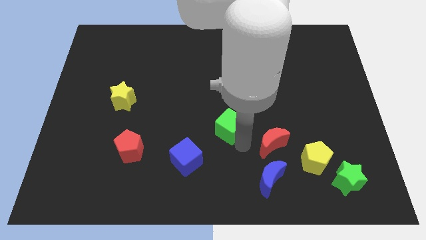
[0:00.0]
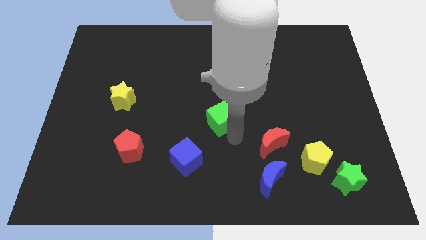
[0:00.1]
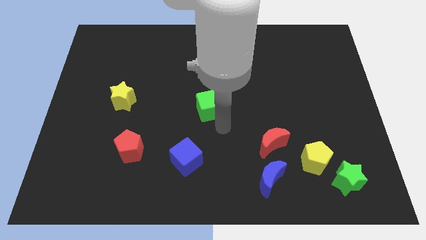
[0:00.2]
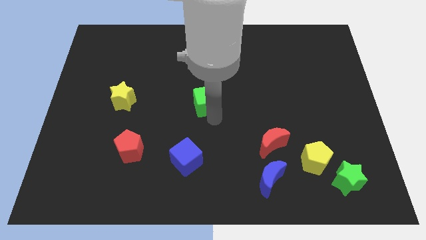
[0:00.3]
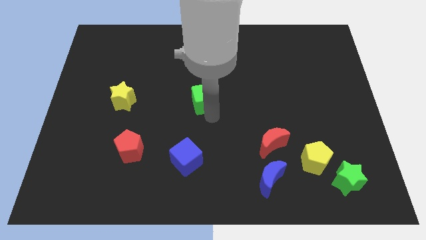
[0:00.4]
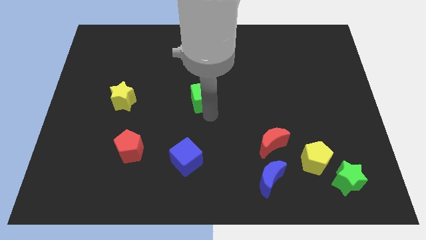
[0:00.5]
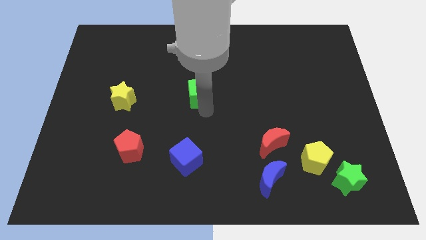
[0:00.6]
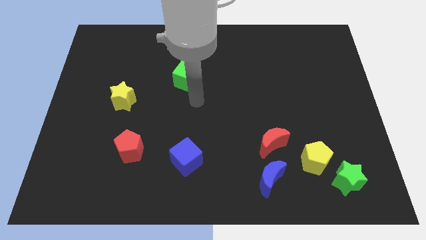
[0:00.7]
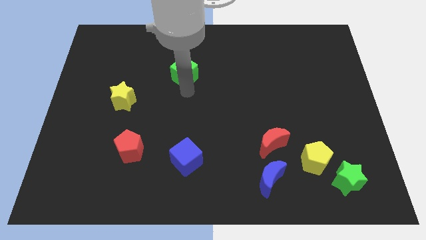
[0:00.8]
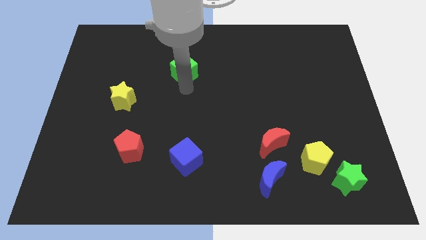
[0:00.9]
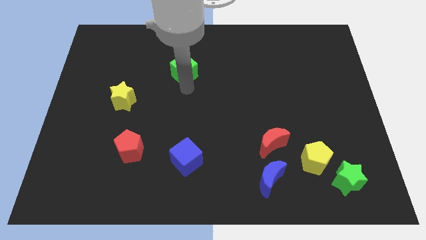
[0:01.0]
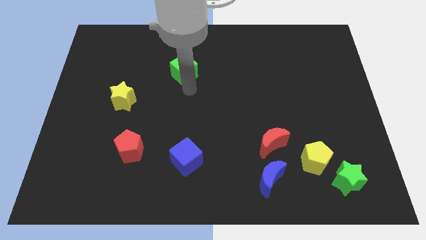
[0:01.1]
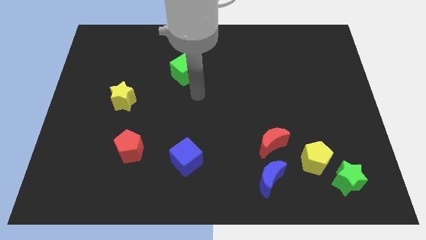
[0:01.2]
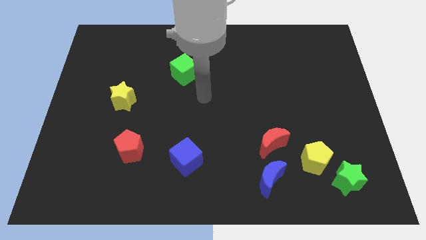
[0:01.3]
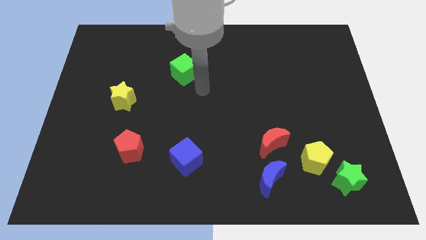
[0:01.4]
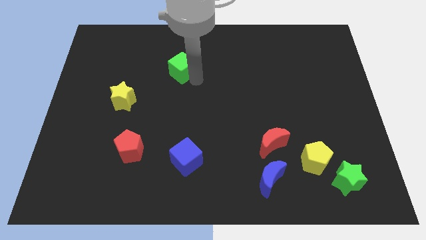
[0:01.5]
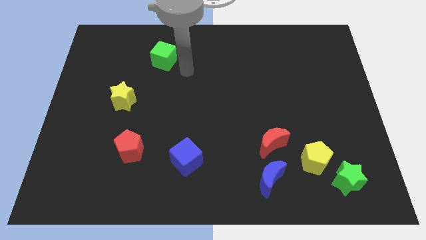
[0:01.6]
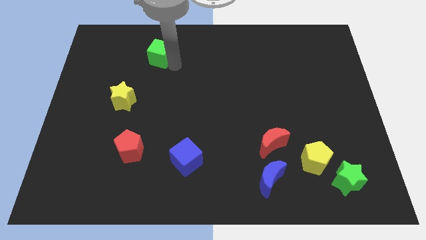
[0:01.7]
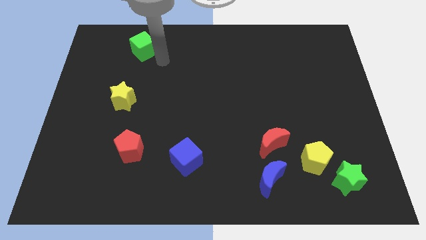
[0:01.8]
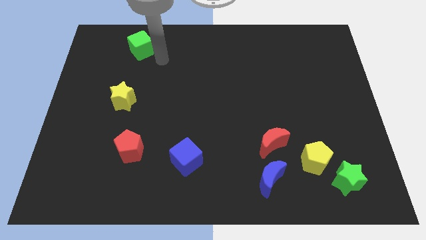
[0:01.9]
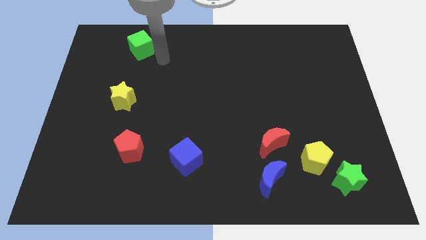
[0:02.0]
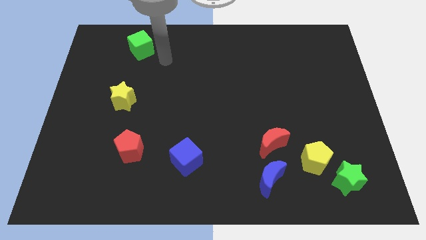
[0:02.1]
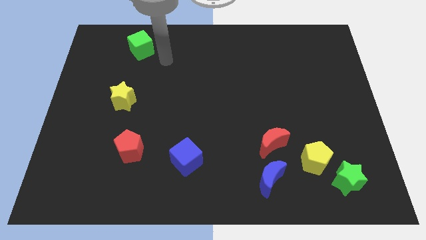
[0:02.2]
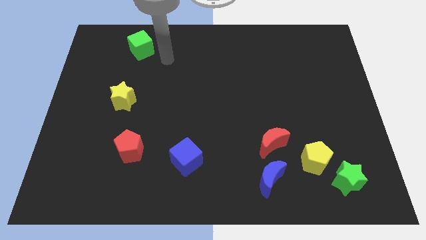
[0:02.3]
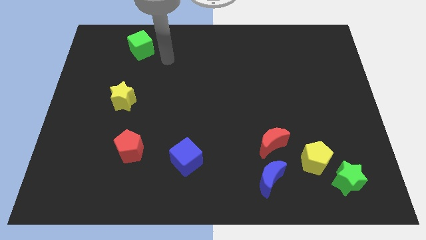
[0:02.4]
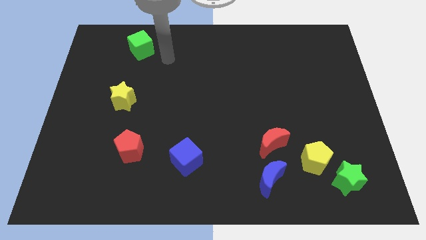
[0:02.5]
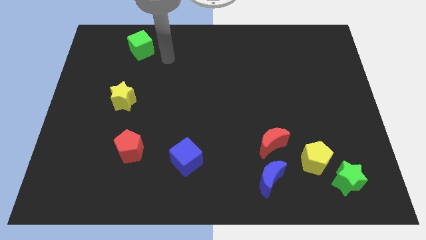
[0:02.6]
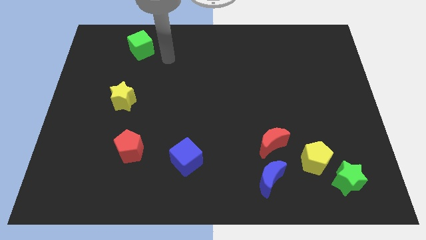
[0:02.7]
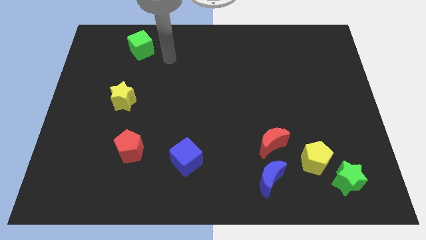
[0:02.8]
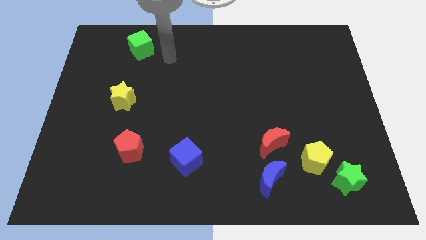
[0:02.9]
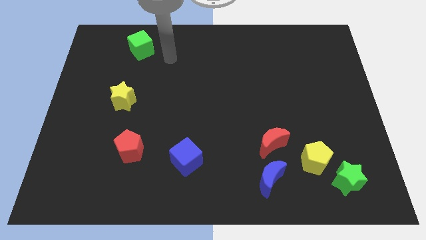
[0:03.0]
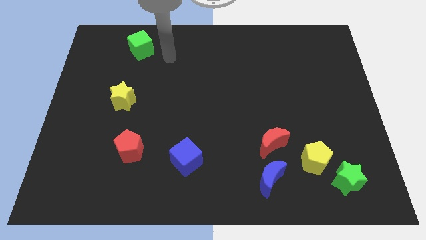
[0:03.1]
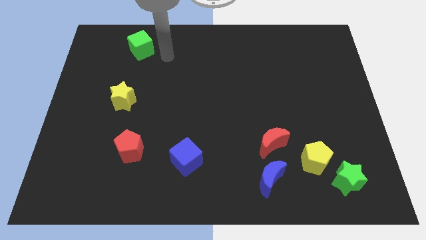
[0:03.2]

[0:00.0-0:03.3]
move the green cube to the top of the yellow star

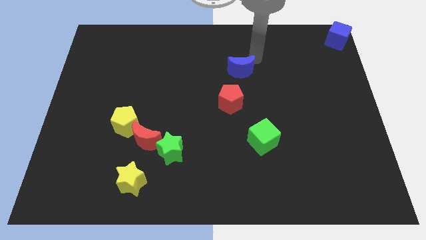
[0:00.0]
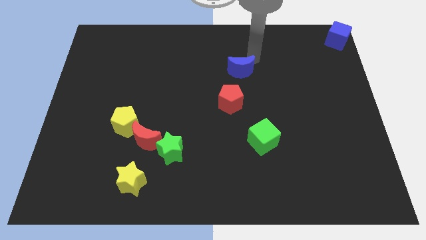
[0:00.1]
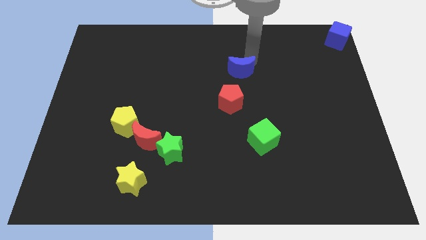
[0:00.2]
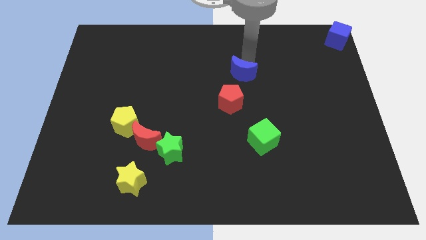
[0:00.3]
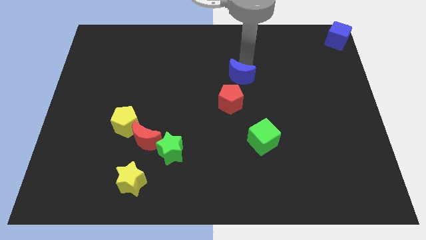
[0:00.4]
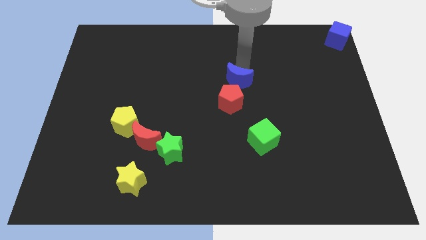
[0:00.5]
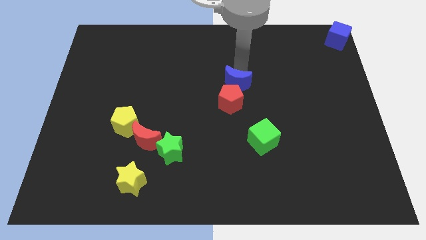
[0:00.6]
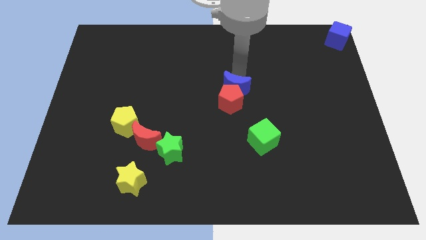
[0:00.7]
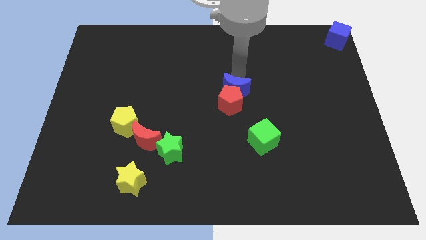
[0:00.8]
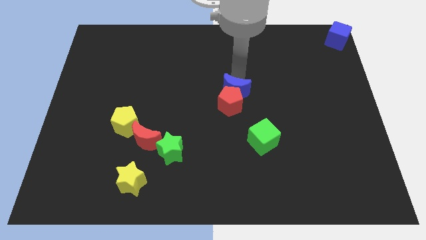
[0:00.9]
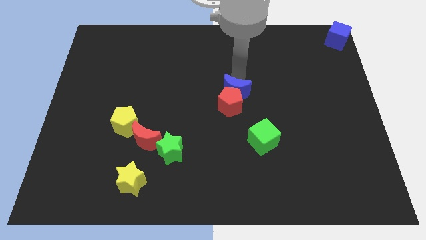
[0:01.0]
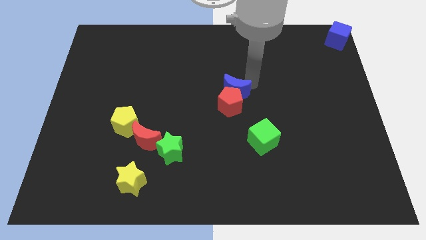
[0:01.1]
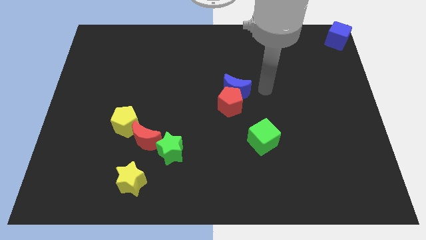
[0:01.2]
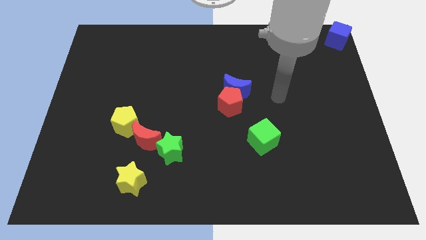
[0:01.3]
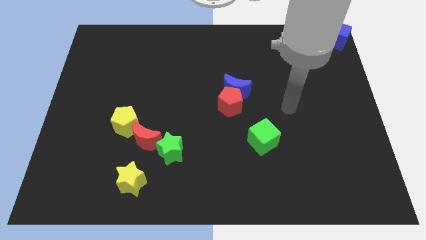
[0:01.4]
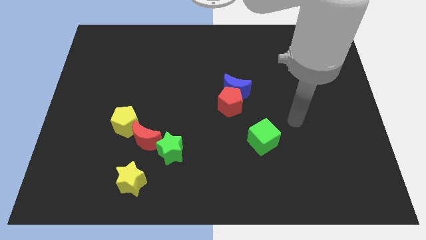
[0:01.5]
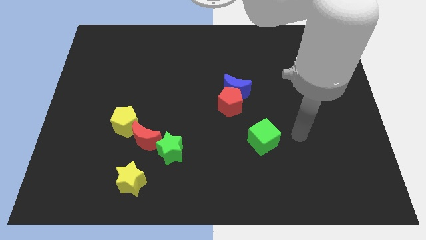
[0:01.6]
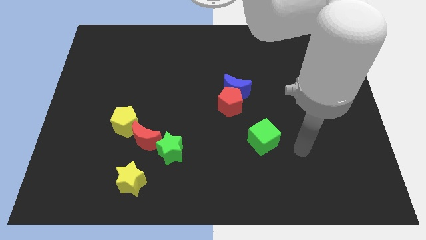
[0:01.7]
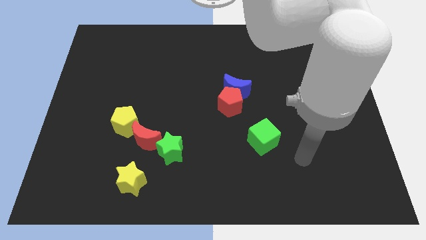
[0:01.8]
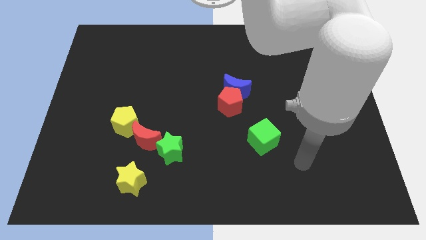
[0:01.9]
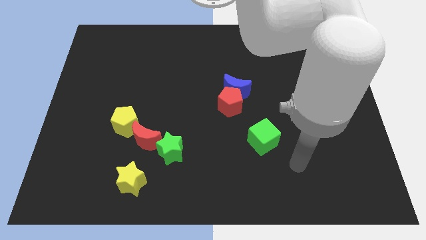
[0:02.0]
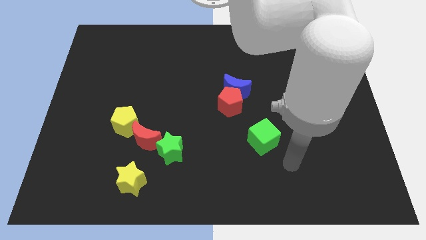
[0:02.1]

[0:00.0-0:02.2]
slide the blue crescent at the top right side of the red pentagon

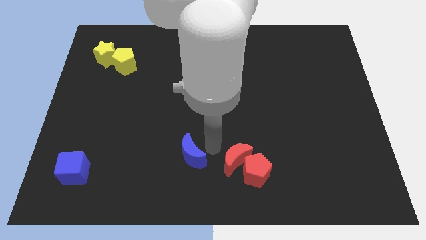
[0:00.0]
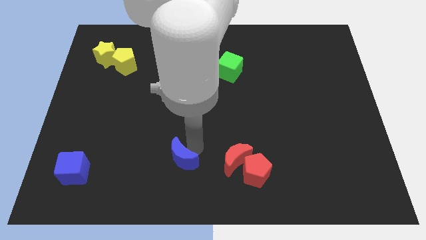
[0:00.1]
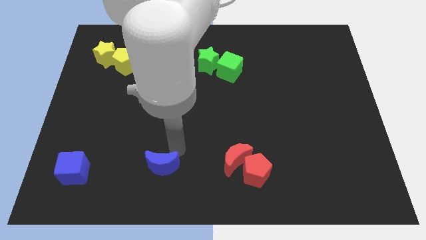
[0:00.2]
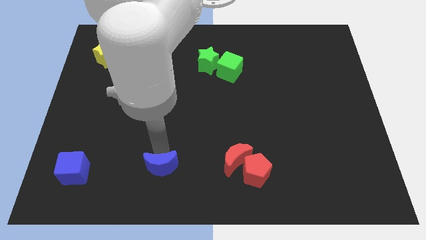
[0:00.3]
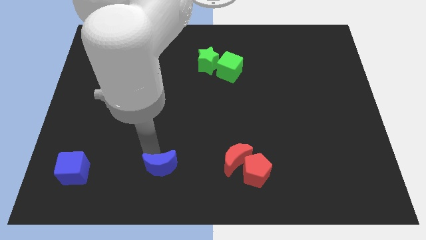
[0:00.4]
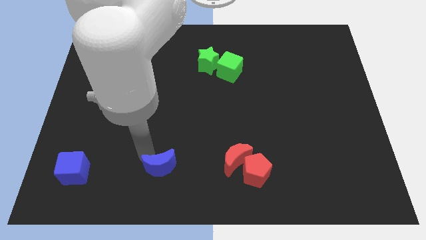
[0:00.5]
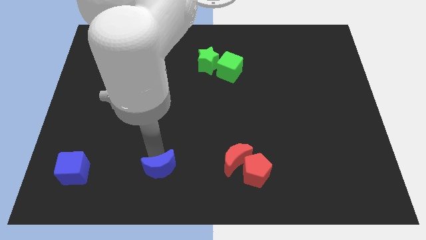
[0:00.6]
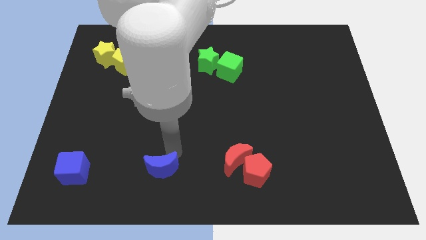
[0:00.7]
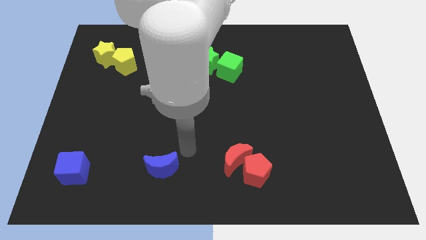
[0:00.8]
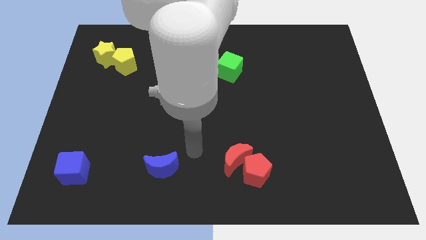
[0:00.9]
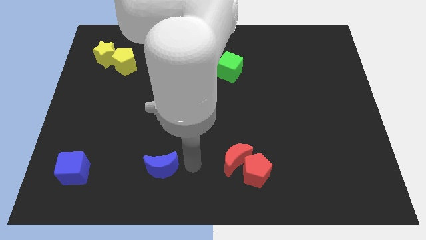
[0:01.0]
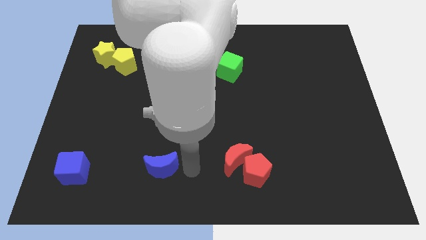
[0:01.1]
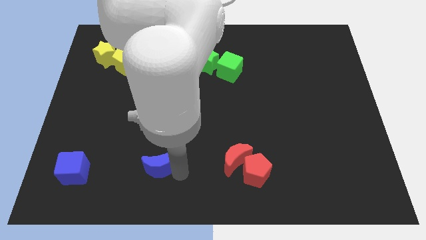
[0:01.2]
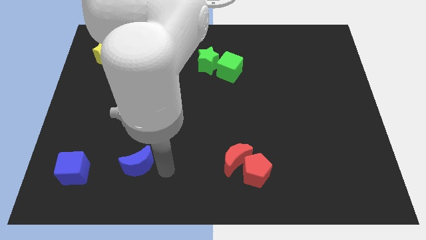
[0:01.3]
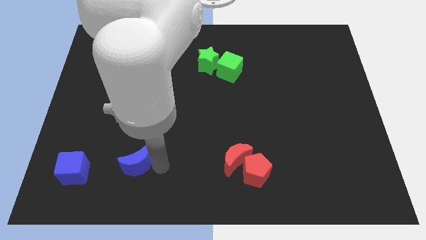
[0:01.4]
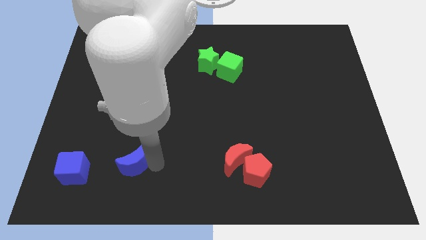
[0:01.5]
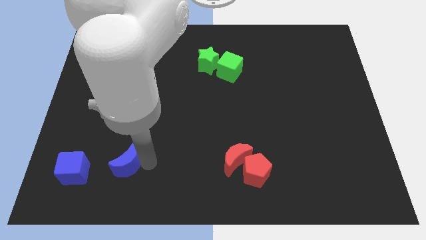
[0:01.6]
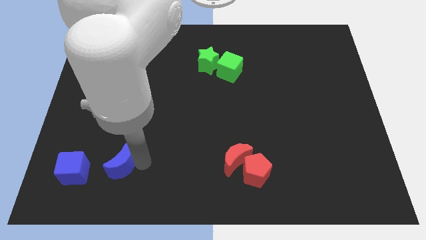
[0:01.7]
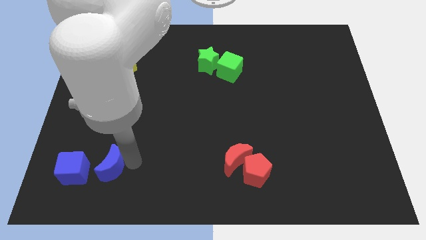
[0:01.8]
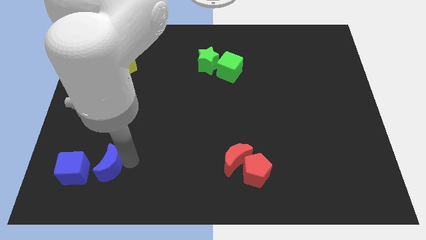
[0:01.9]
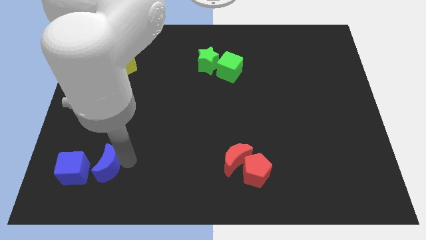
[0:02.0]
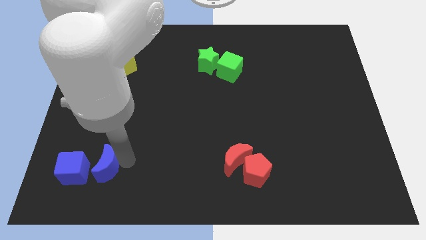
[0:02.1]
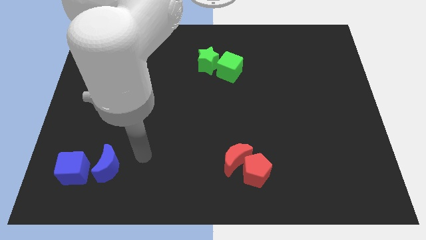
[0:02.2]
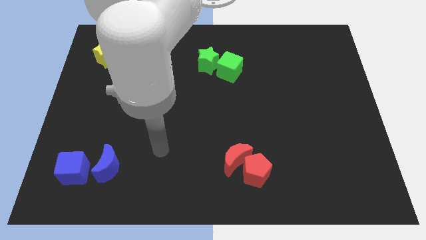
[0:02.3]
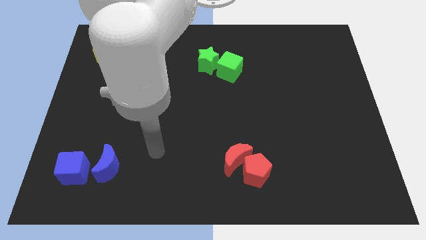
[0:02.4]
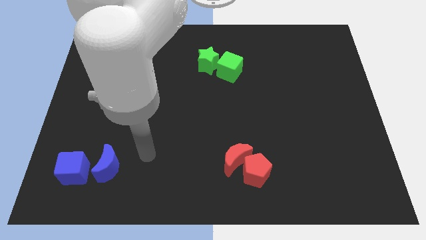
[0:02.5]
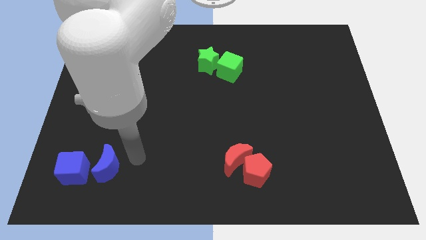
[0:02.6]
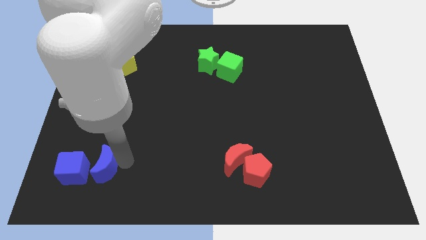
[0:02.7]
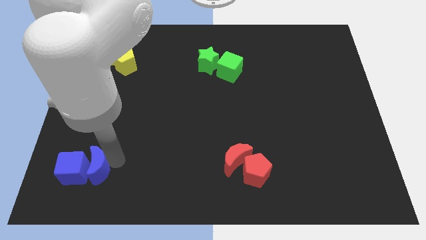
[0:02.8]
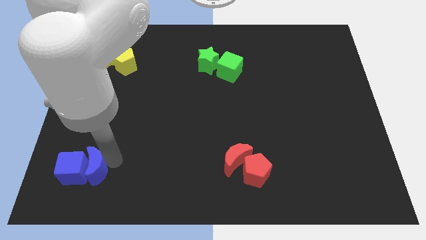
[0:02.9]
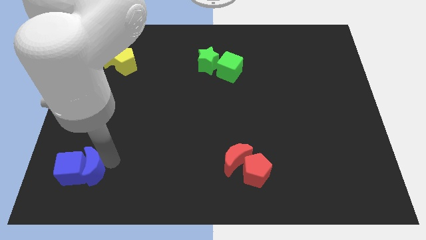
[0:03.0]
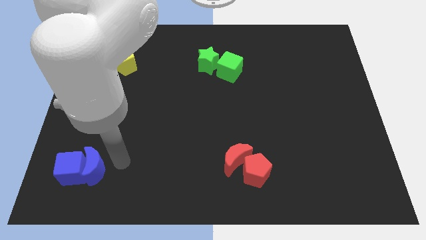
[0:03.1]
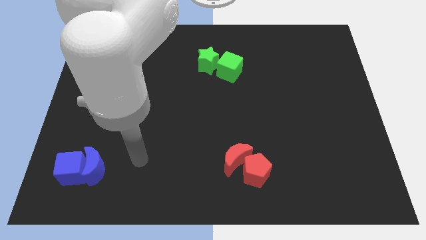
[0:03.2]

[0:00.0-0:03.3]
place the blue moon to the right side of the blue cube
